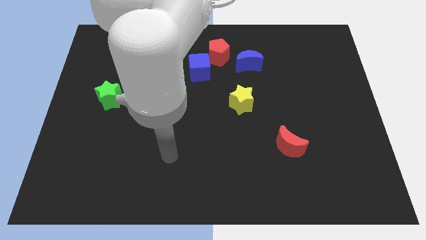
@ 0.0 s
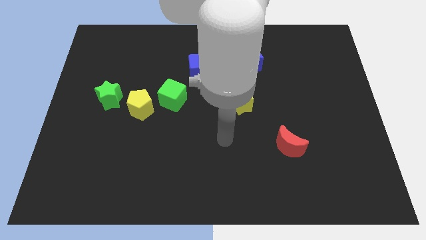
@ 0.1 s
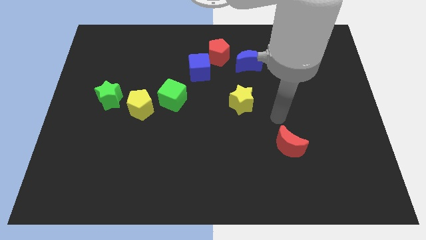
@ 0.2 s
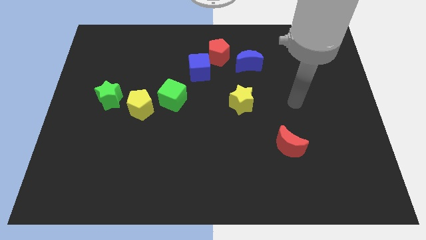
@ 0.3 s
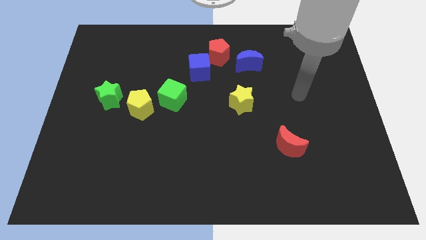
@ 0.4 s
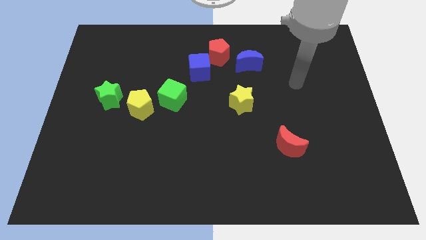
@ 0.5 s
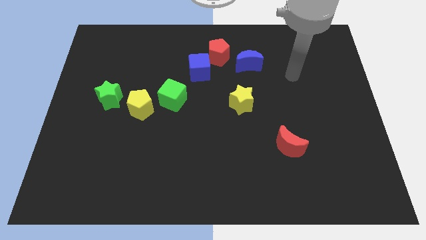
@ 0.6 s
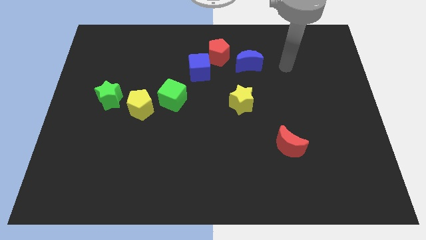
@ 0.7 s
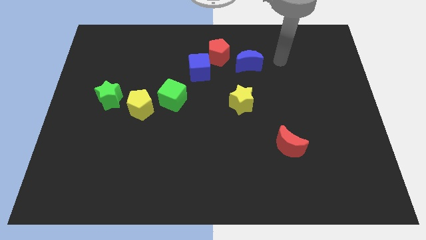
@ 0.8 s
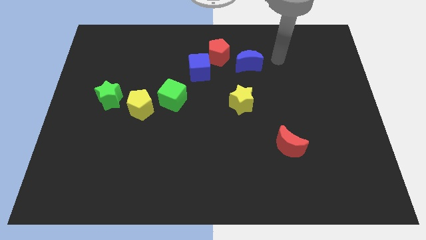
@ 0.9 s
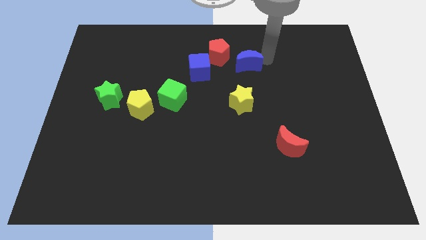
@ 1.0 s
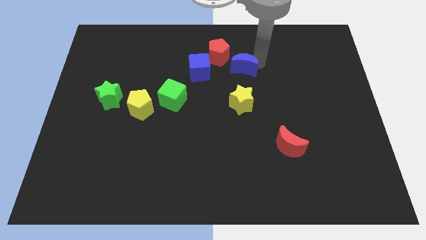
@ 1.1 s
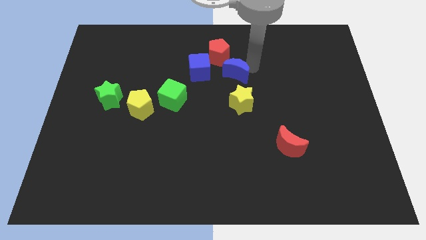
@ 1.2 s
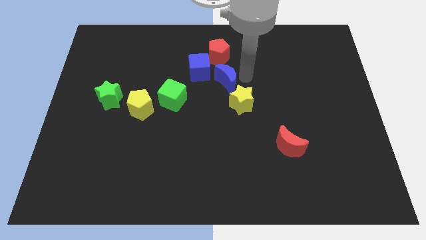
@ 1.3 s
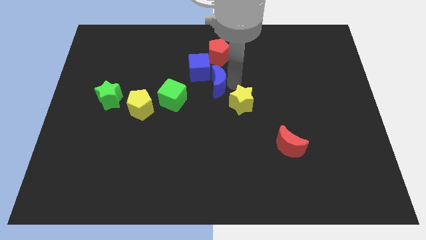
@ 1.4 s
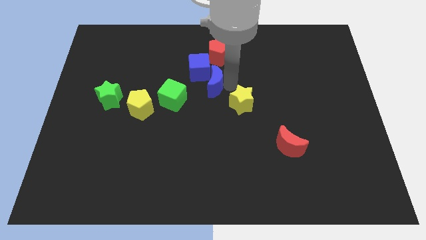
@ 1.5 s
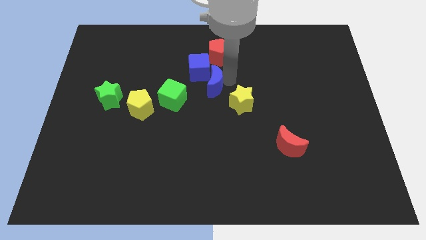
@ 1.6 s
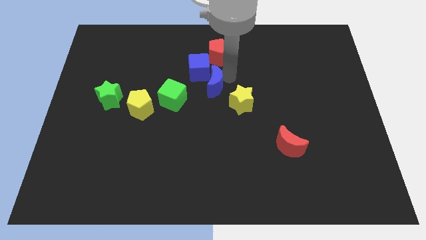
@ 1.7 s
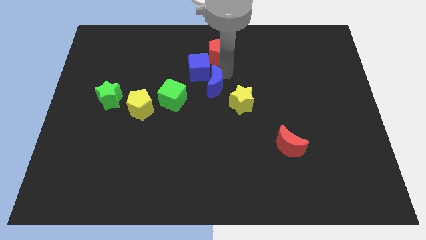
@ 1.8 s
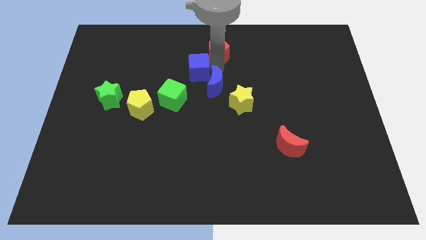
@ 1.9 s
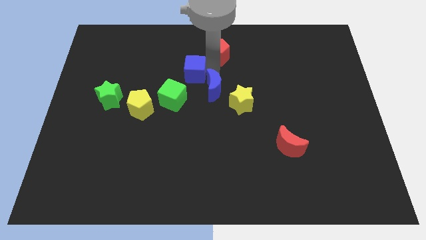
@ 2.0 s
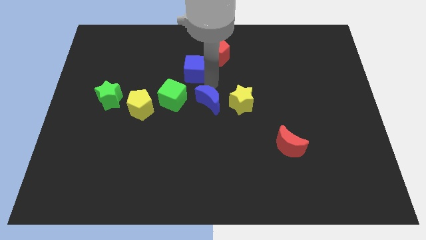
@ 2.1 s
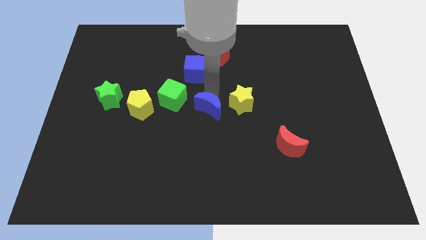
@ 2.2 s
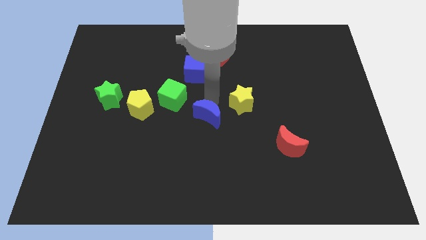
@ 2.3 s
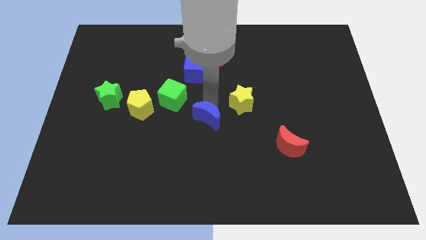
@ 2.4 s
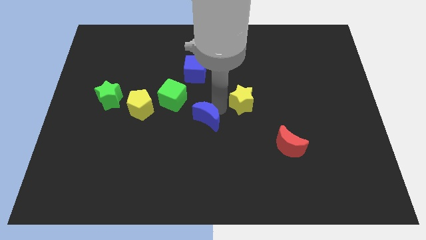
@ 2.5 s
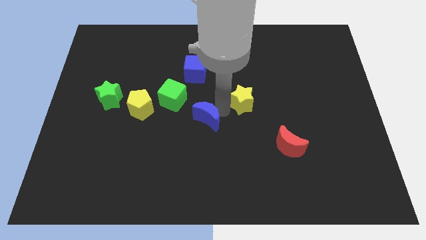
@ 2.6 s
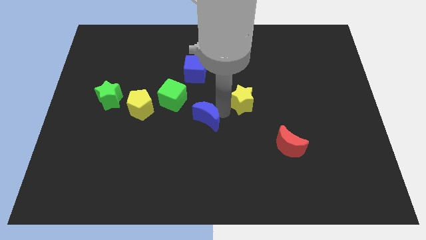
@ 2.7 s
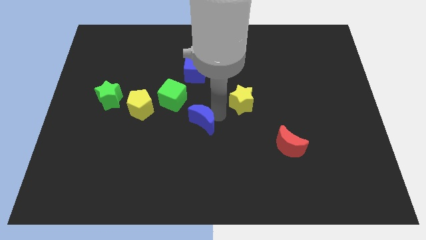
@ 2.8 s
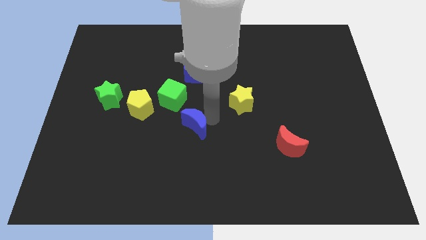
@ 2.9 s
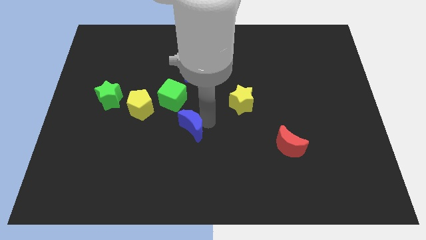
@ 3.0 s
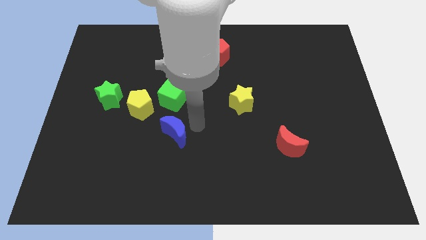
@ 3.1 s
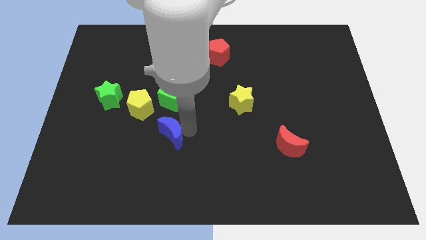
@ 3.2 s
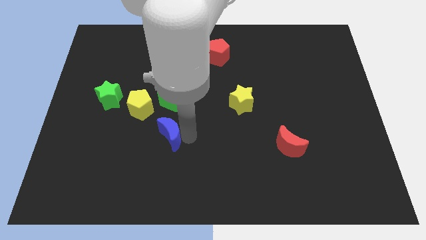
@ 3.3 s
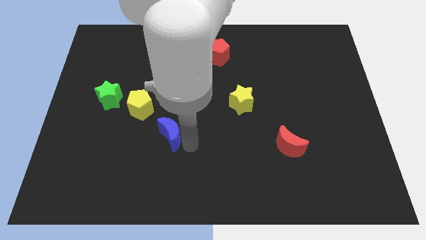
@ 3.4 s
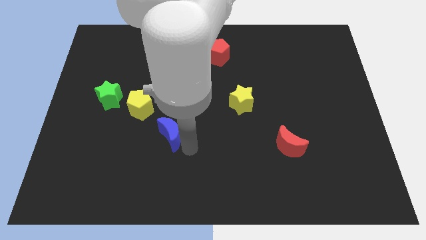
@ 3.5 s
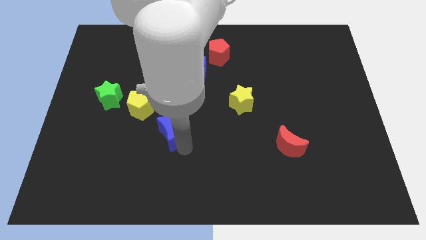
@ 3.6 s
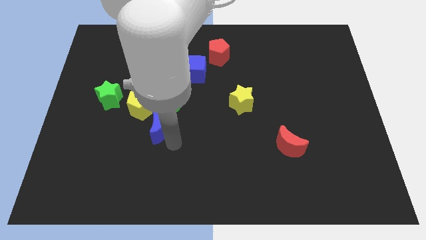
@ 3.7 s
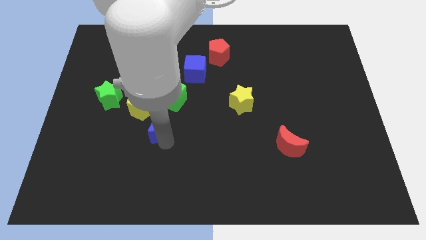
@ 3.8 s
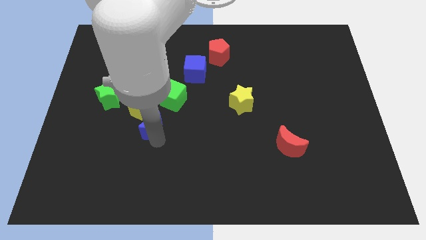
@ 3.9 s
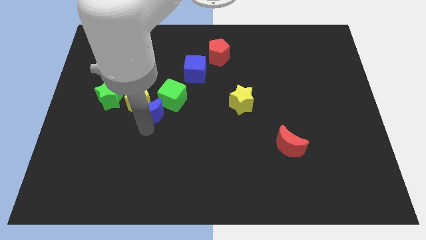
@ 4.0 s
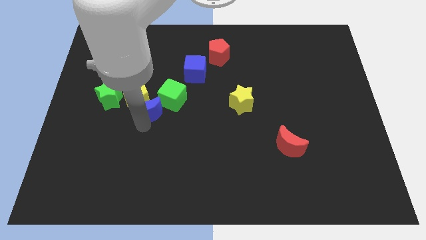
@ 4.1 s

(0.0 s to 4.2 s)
move the blue moon close to the yellow pentagon

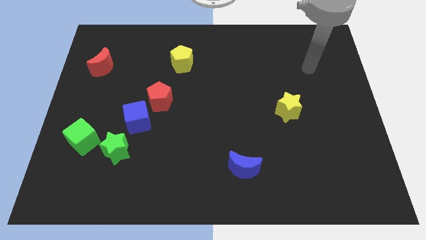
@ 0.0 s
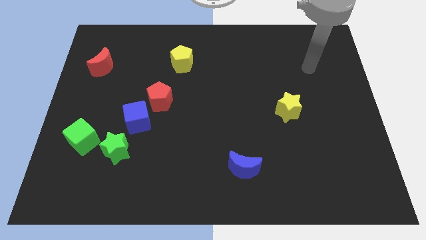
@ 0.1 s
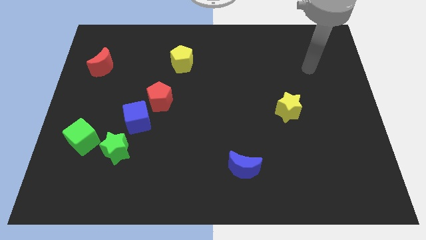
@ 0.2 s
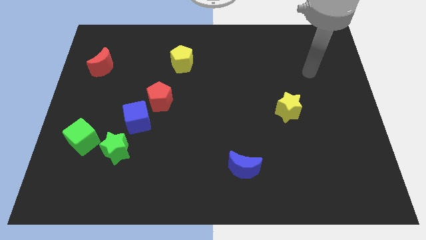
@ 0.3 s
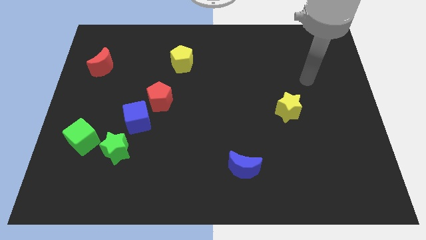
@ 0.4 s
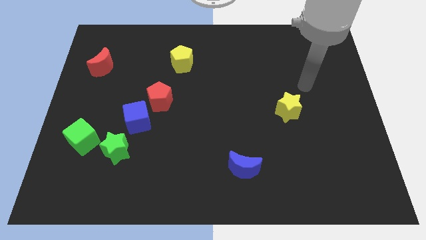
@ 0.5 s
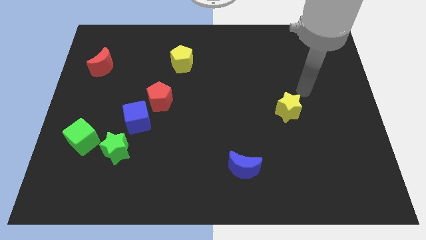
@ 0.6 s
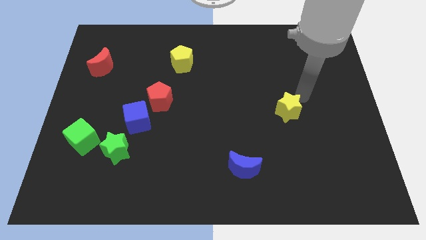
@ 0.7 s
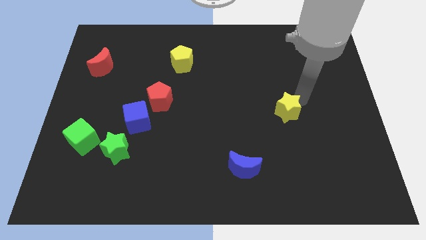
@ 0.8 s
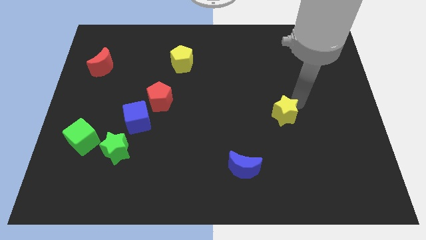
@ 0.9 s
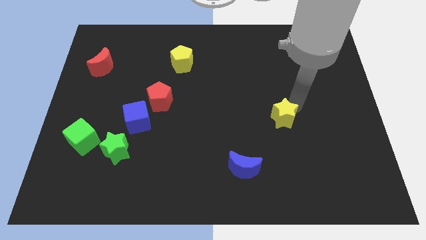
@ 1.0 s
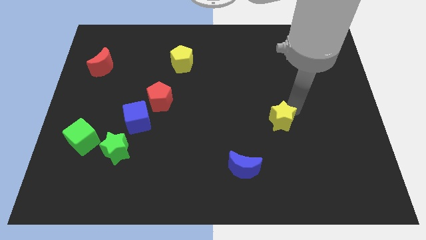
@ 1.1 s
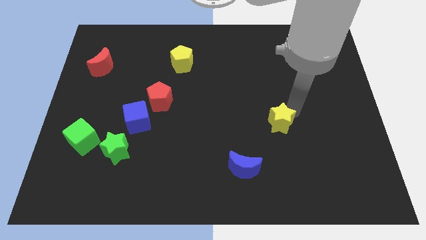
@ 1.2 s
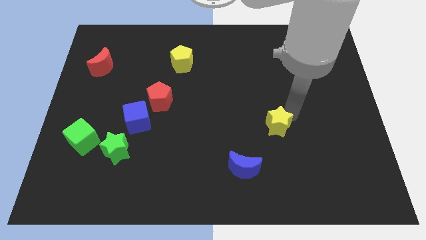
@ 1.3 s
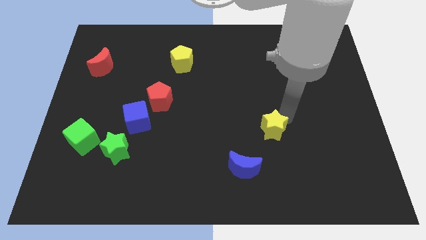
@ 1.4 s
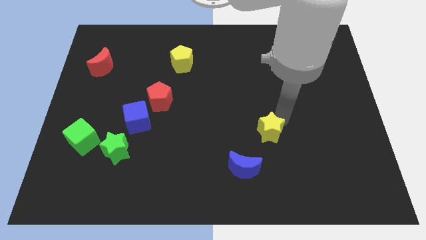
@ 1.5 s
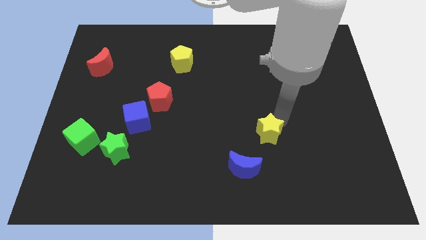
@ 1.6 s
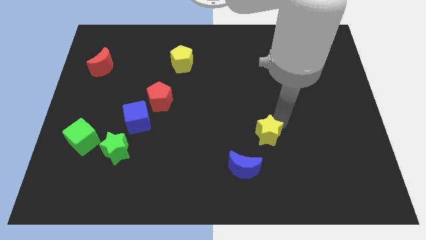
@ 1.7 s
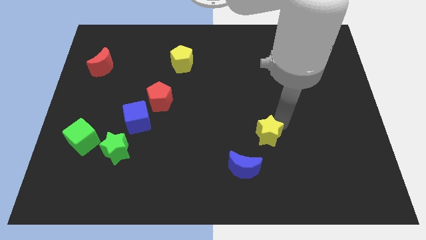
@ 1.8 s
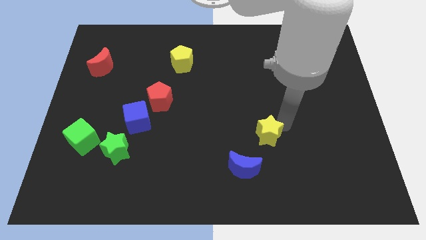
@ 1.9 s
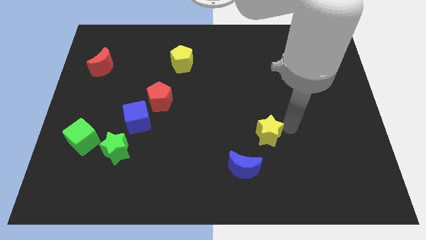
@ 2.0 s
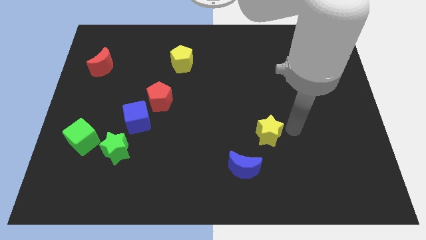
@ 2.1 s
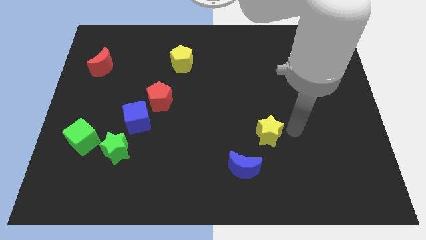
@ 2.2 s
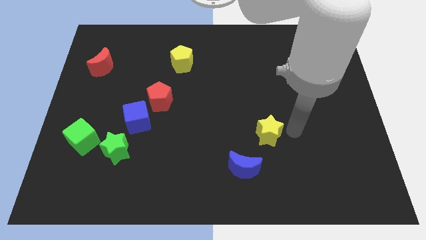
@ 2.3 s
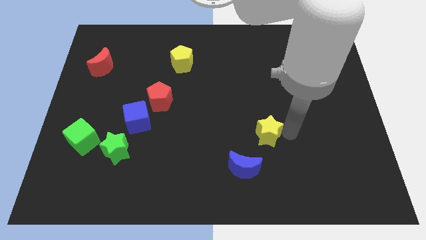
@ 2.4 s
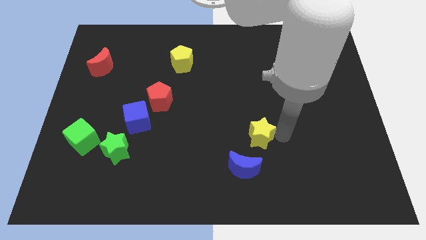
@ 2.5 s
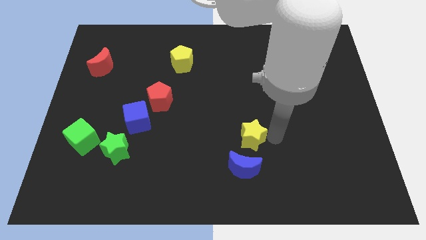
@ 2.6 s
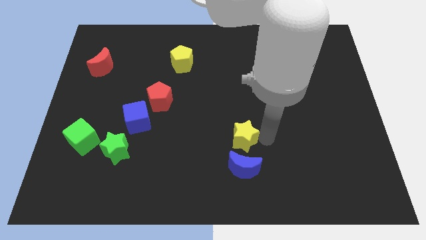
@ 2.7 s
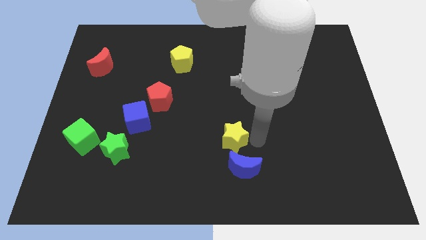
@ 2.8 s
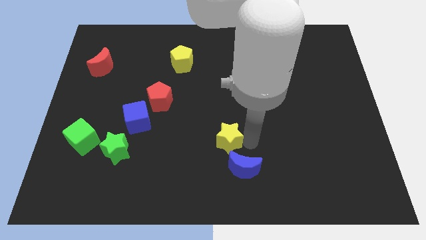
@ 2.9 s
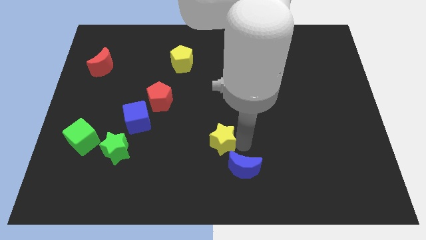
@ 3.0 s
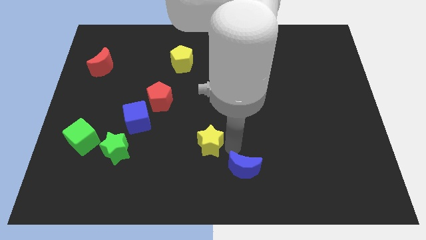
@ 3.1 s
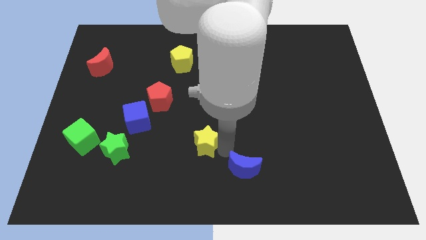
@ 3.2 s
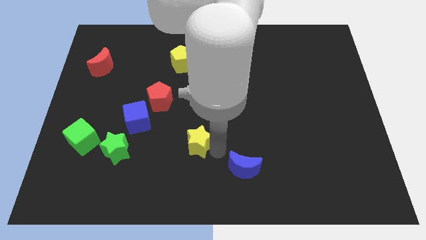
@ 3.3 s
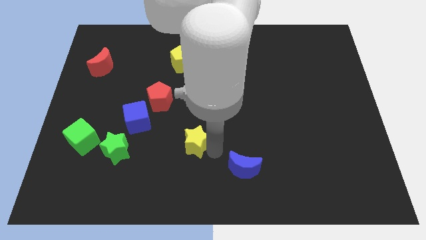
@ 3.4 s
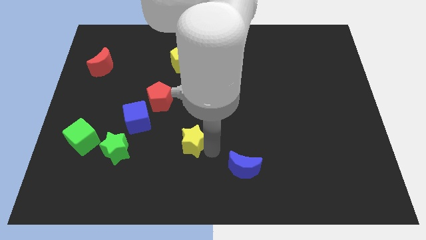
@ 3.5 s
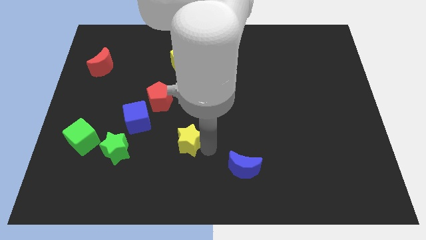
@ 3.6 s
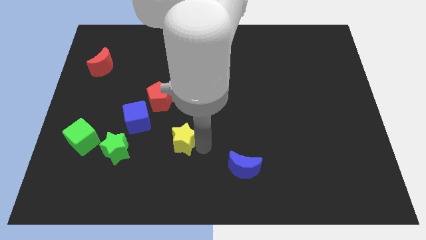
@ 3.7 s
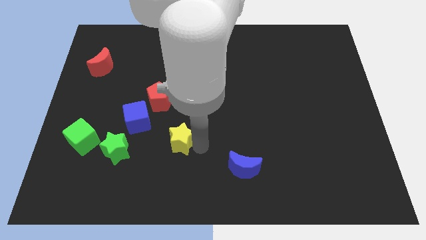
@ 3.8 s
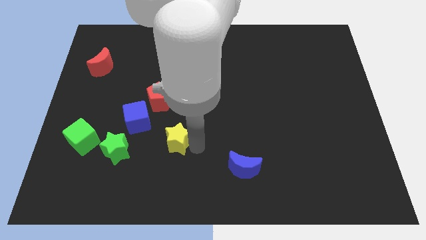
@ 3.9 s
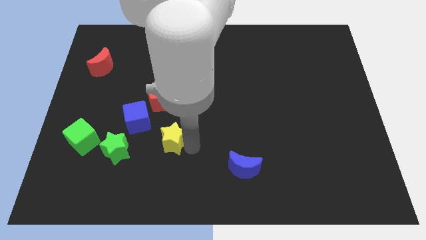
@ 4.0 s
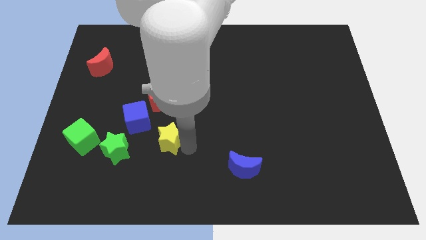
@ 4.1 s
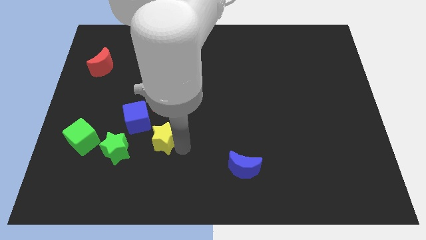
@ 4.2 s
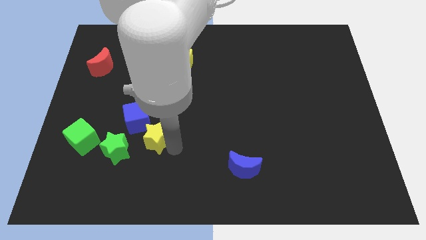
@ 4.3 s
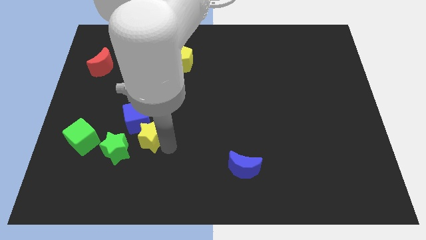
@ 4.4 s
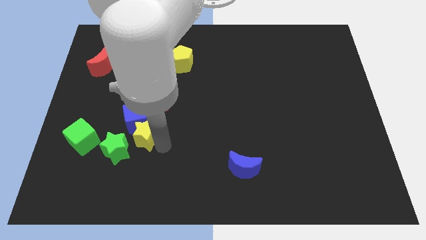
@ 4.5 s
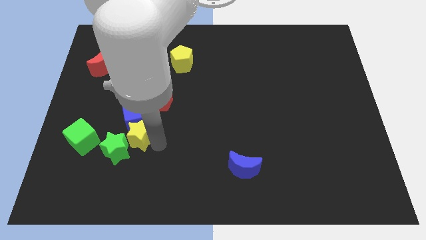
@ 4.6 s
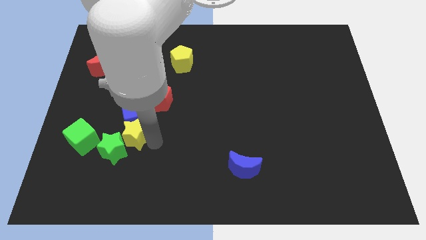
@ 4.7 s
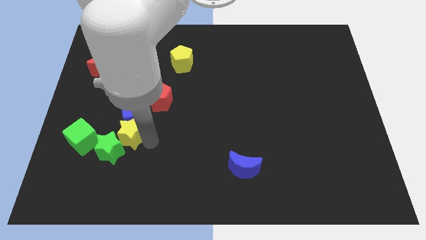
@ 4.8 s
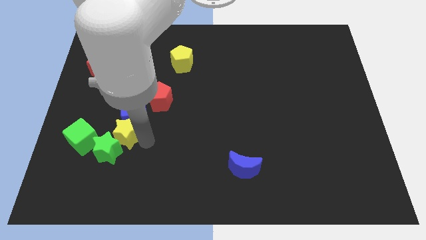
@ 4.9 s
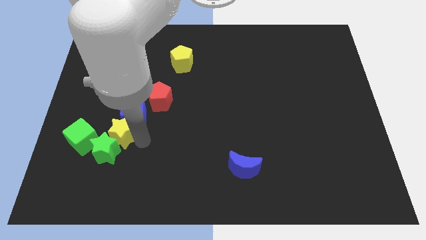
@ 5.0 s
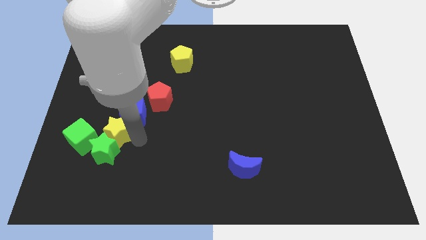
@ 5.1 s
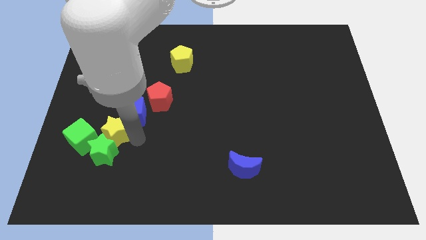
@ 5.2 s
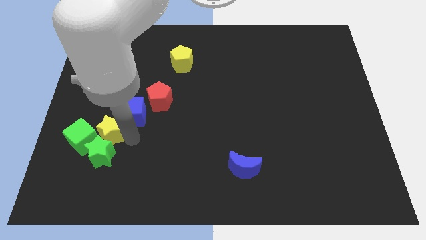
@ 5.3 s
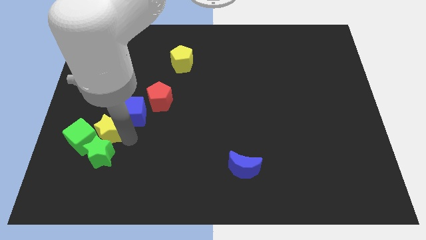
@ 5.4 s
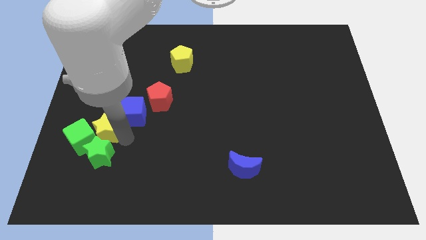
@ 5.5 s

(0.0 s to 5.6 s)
put the yellow star to the green cube
